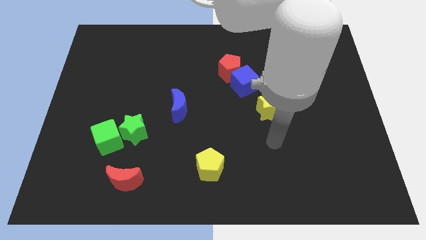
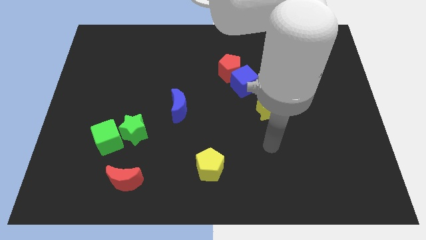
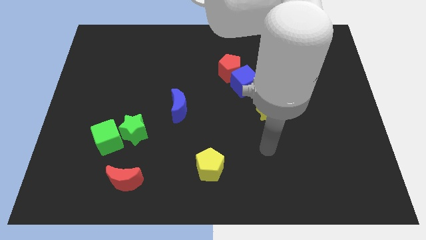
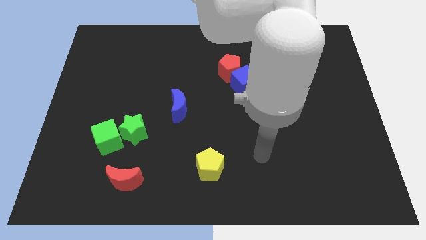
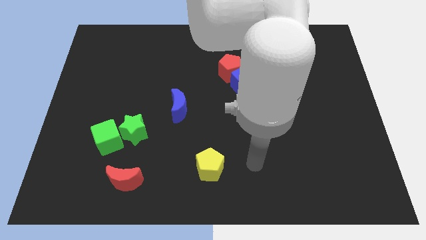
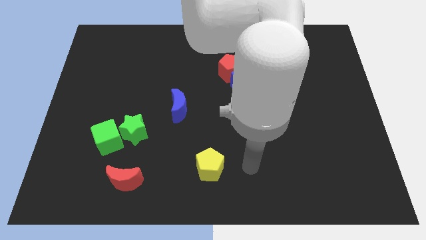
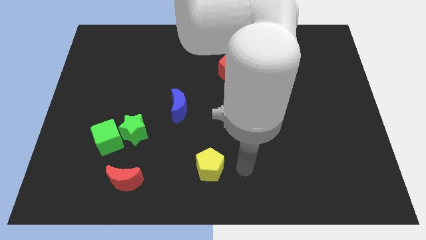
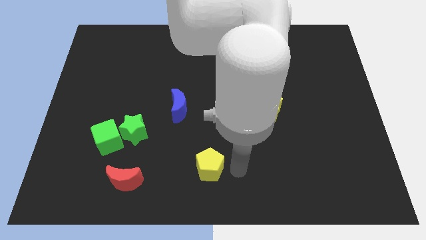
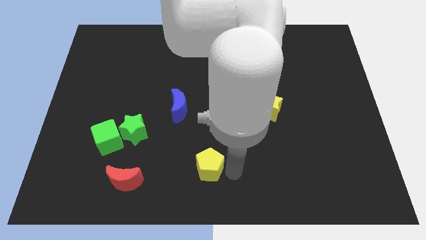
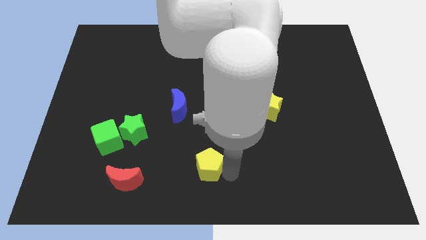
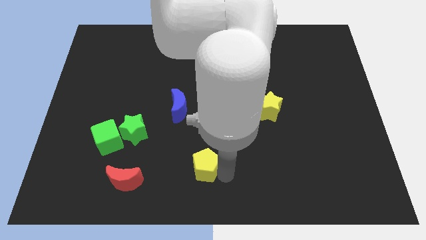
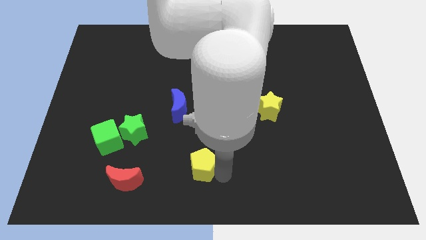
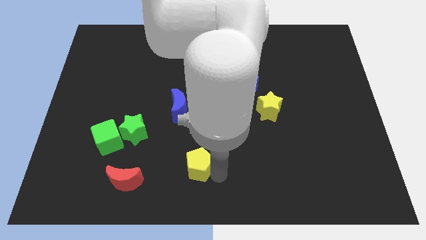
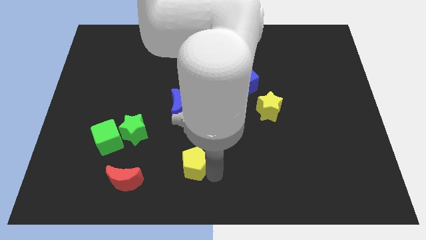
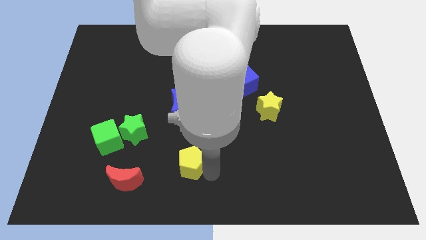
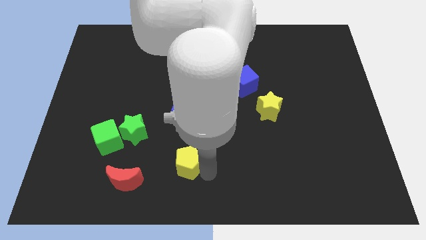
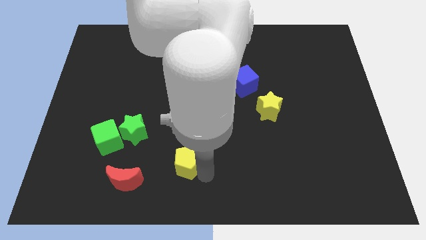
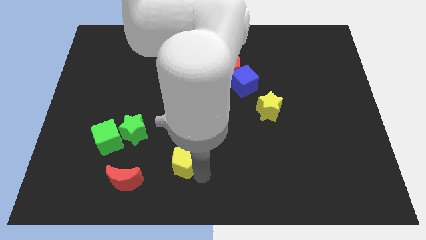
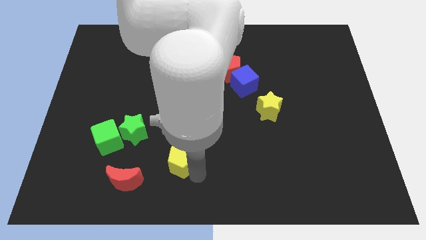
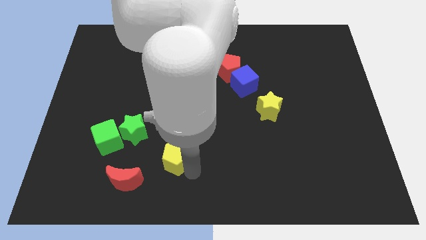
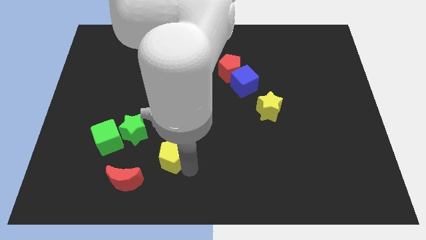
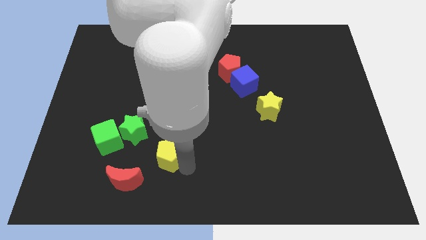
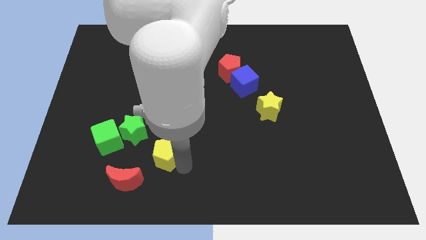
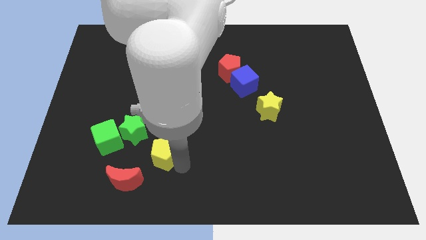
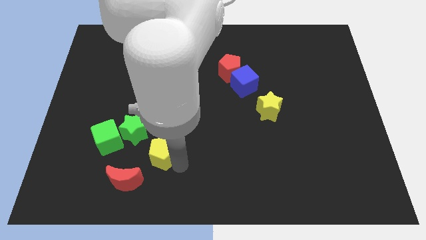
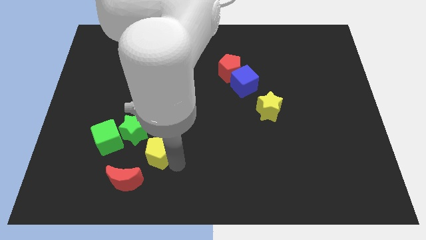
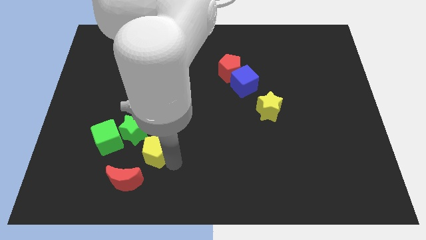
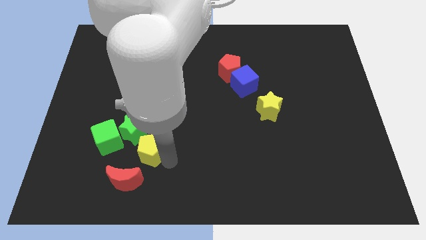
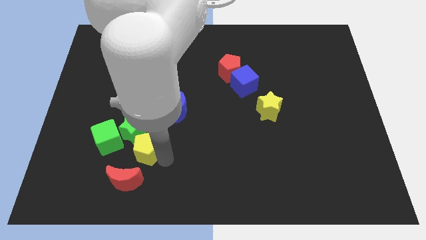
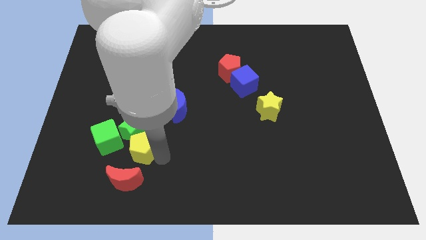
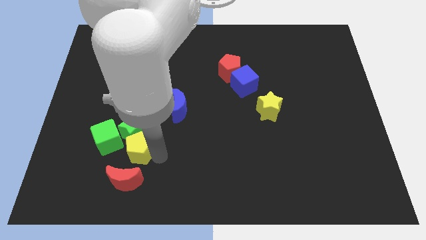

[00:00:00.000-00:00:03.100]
put the yellow pentagon close to the green star

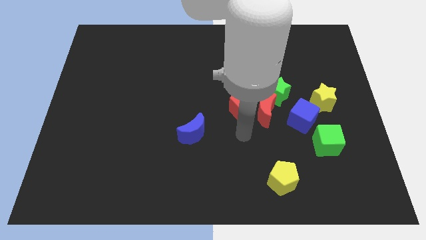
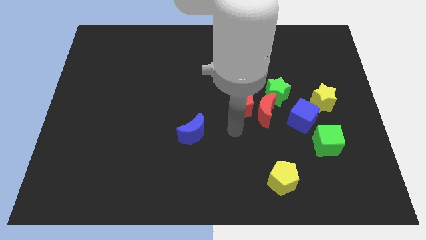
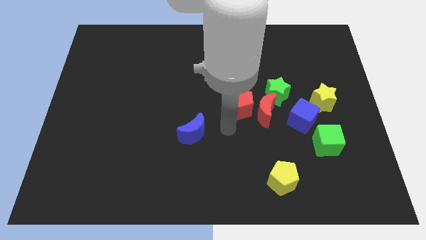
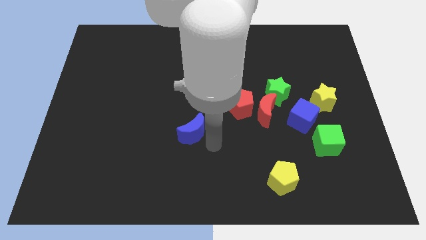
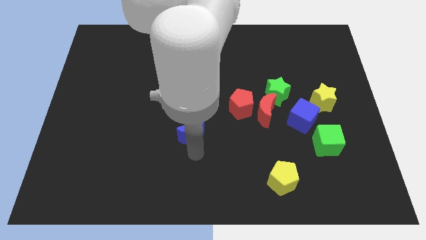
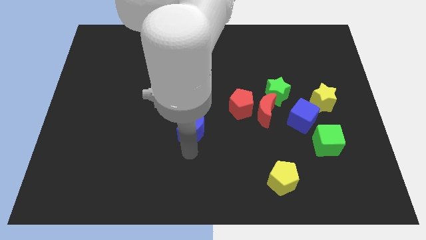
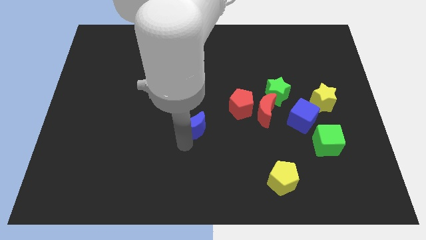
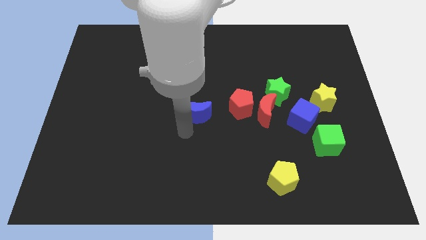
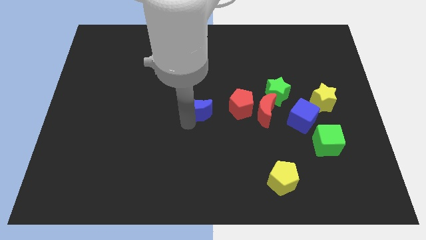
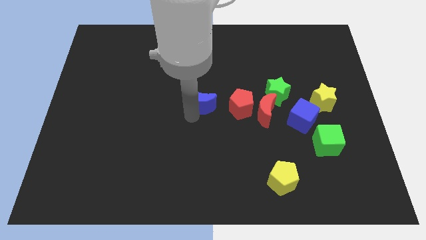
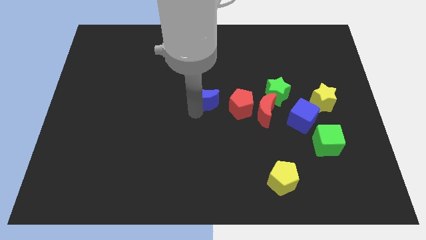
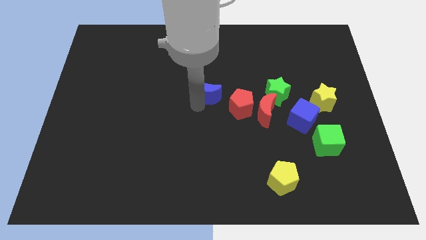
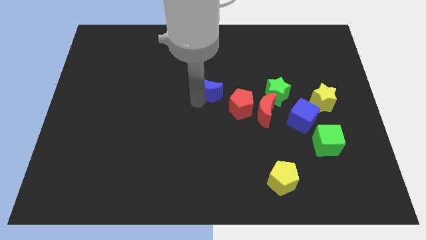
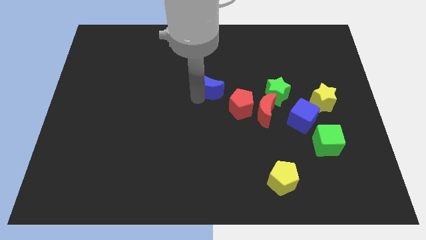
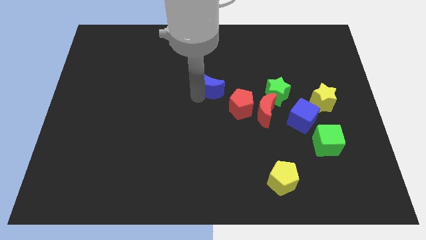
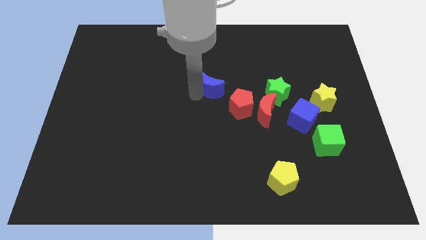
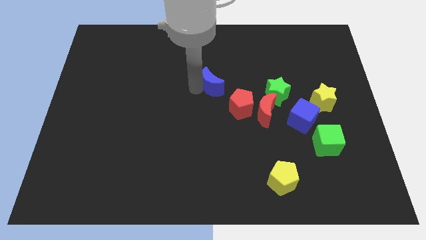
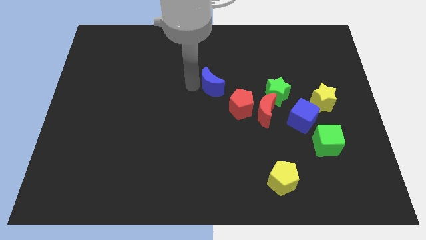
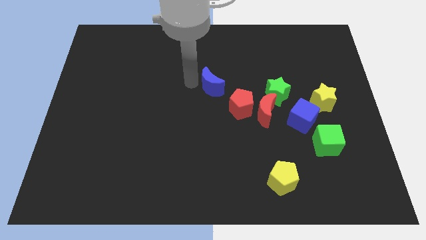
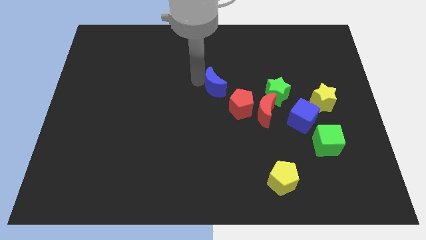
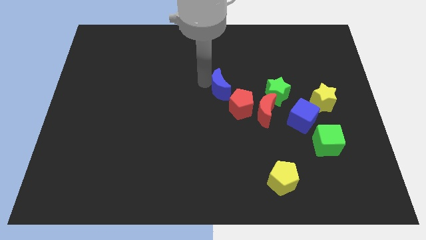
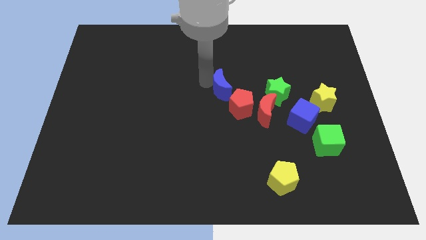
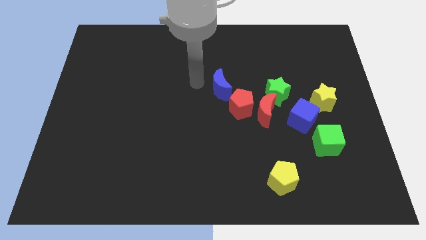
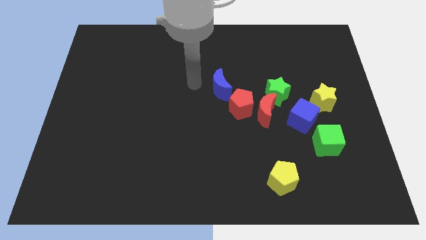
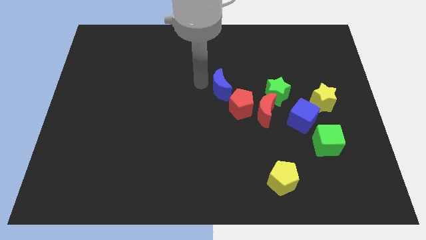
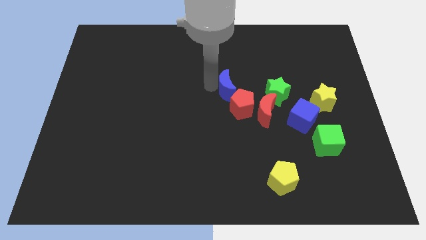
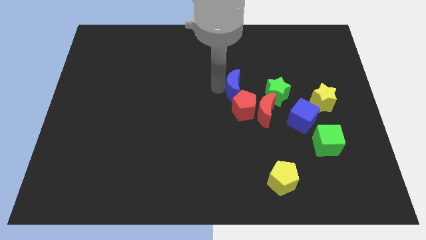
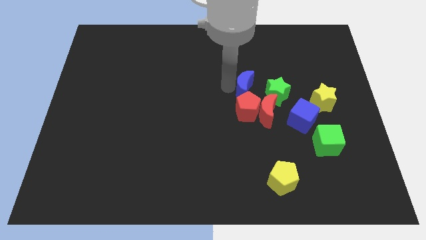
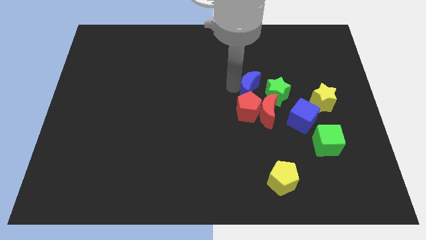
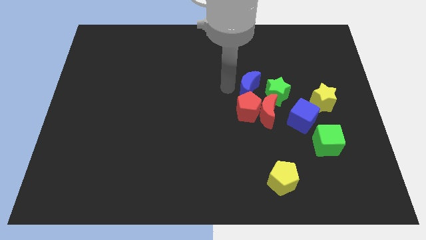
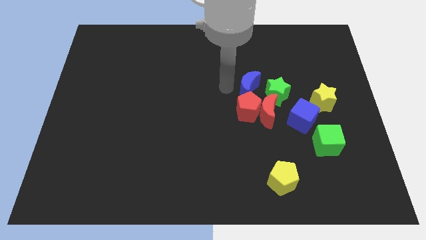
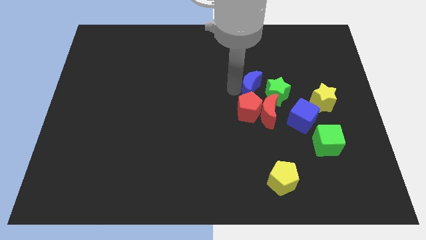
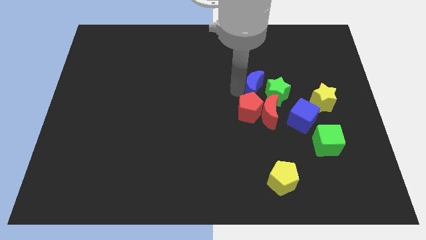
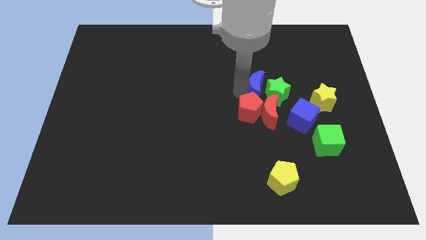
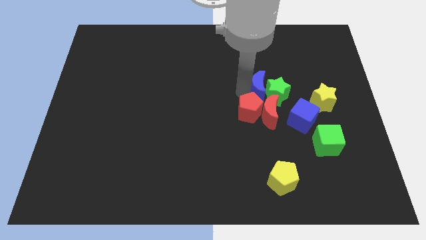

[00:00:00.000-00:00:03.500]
put the blue moon close to the green star

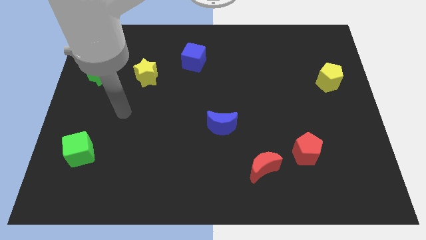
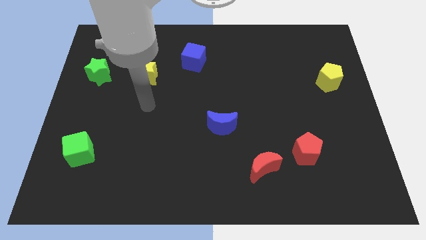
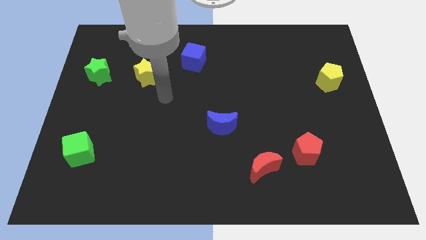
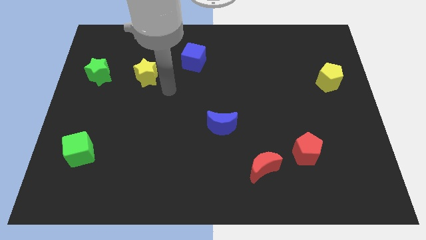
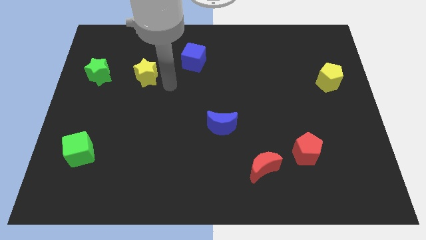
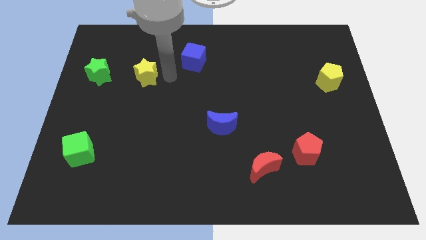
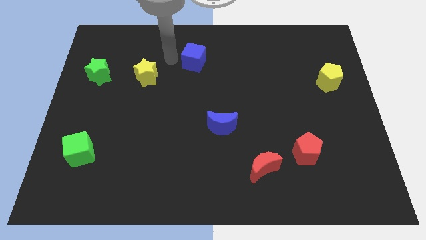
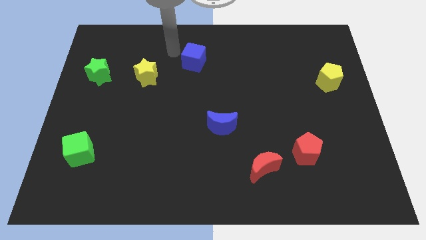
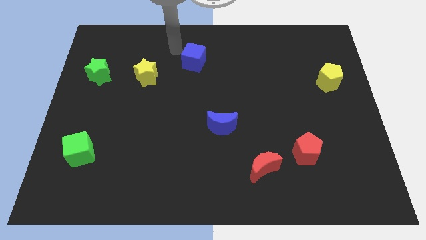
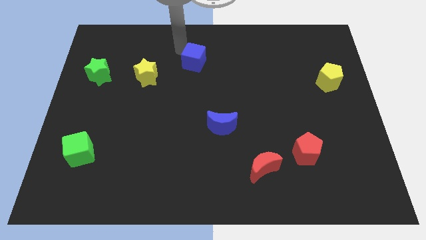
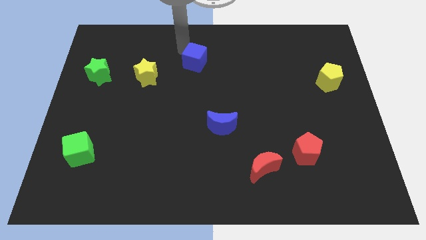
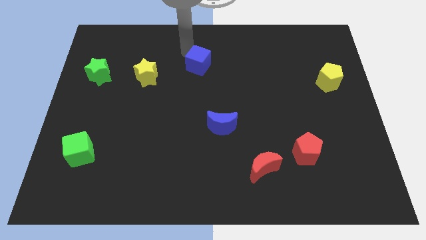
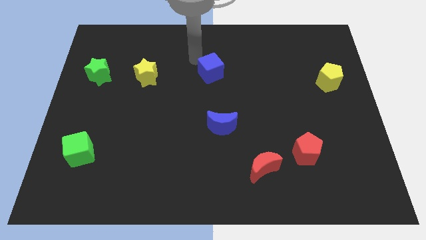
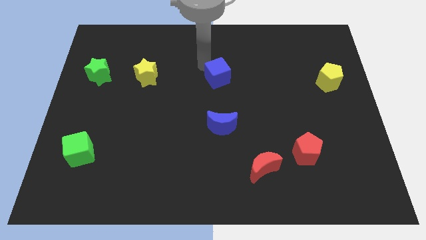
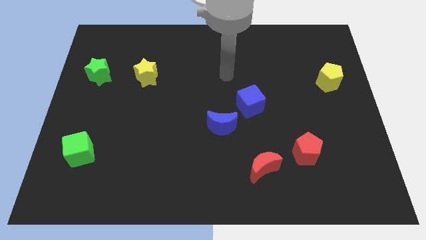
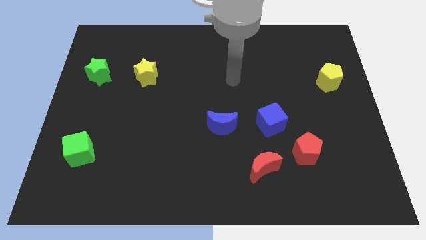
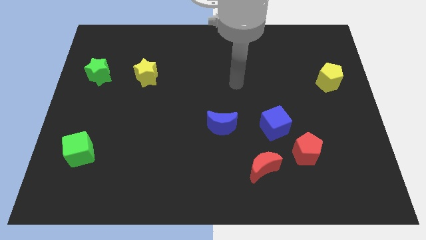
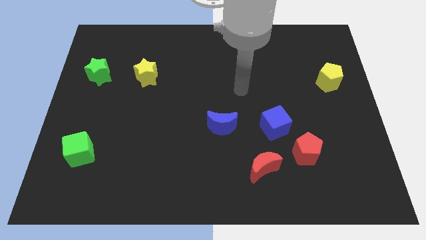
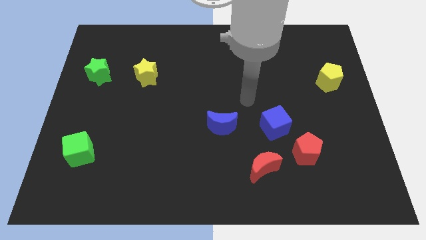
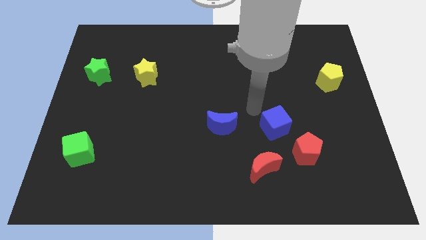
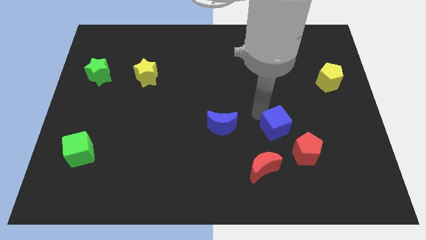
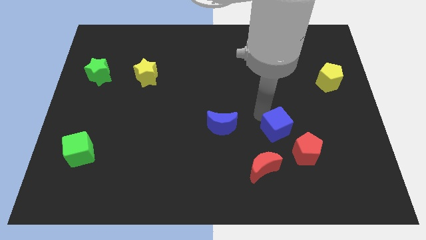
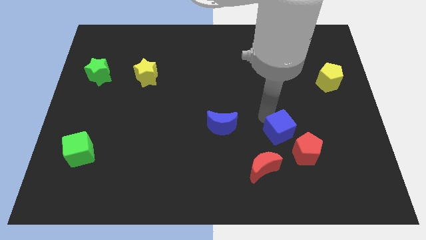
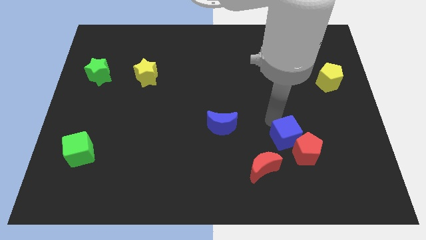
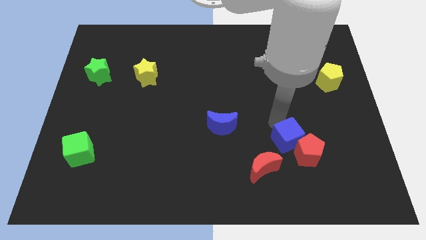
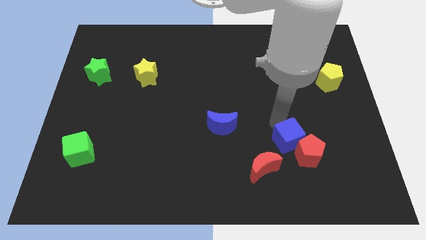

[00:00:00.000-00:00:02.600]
push the blue cube next to the red pentagon
